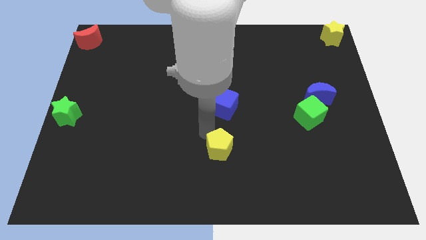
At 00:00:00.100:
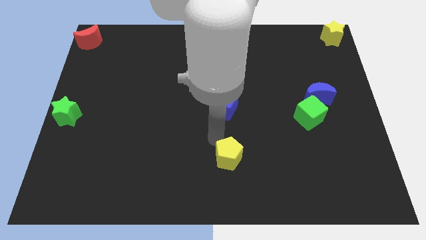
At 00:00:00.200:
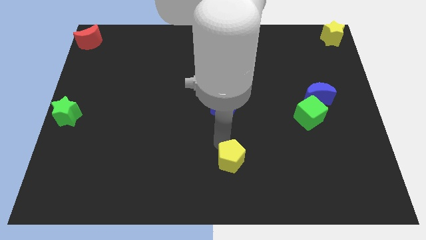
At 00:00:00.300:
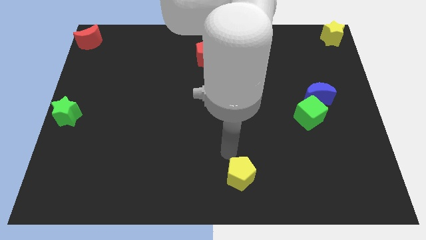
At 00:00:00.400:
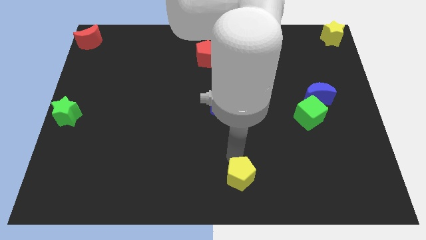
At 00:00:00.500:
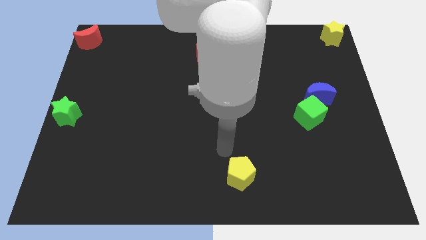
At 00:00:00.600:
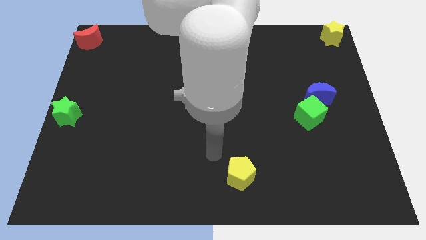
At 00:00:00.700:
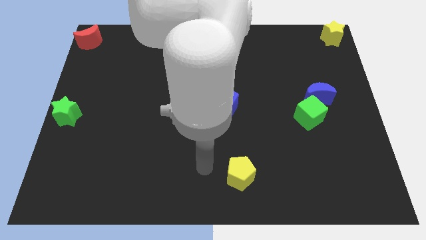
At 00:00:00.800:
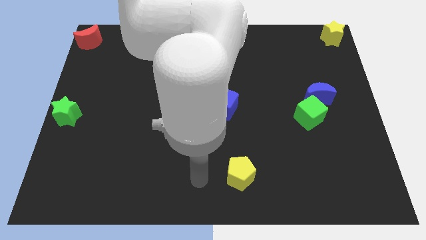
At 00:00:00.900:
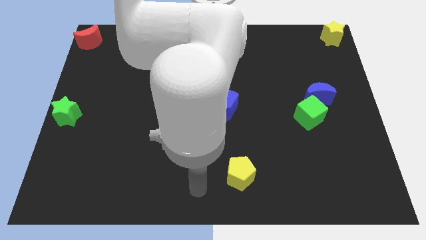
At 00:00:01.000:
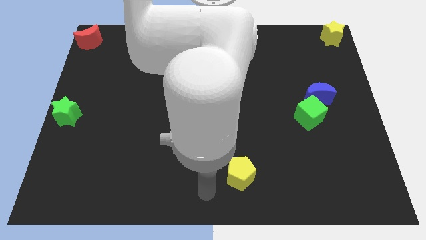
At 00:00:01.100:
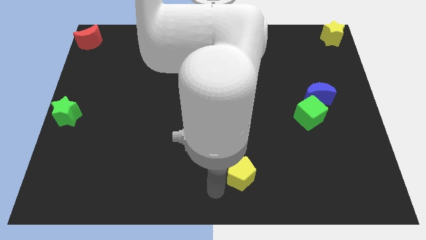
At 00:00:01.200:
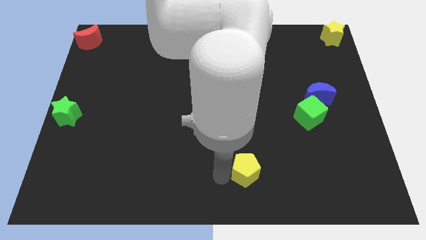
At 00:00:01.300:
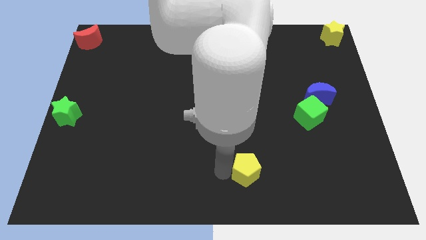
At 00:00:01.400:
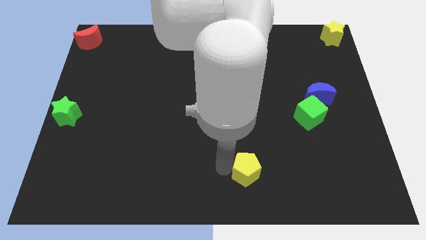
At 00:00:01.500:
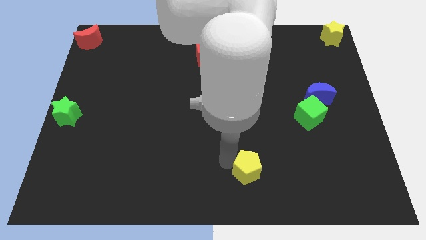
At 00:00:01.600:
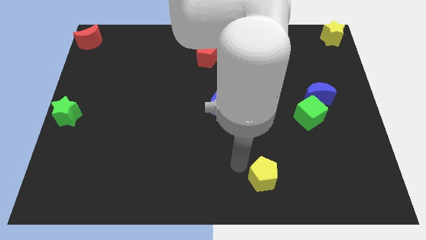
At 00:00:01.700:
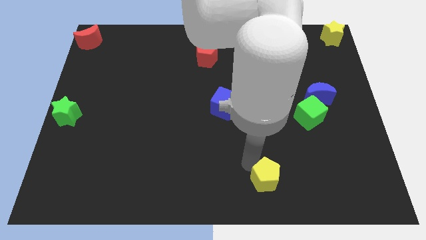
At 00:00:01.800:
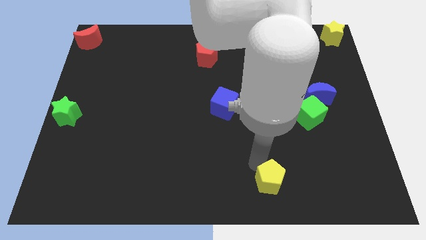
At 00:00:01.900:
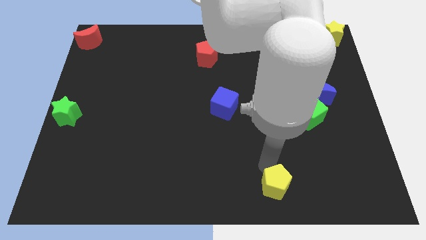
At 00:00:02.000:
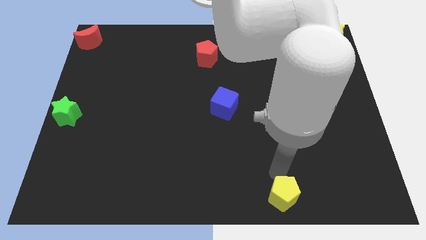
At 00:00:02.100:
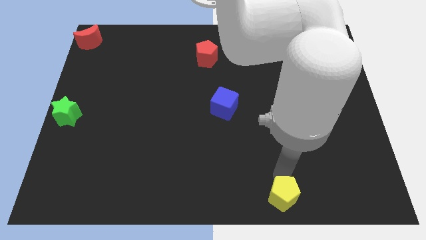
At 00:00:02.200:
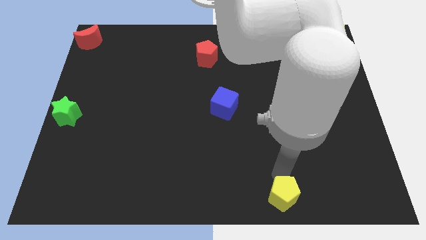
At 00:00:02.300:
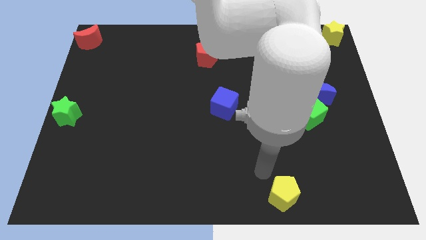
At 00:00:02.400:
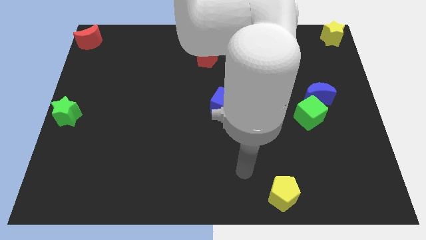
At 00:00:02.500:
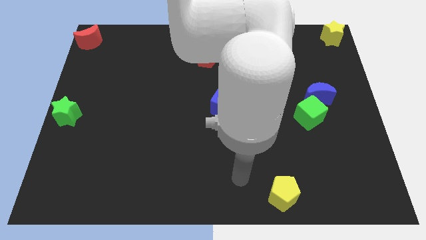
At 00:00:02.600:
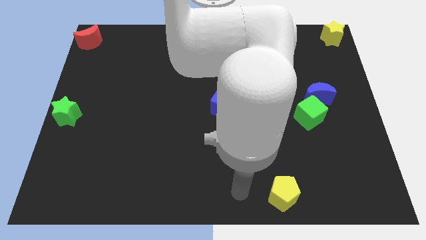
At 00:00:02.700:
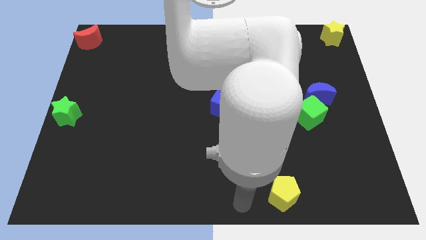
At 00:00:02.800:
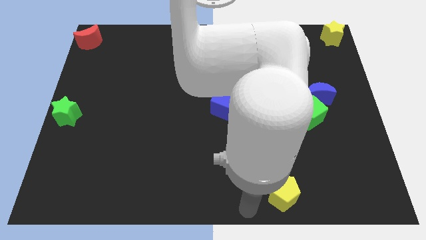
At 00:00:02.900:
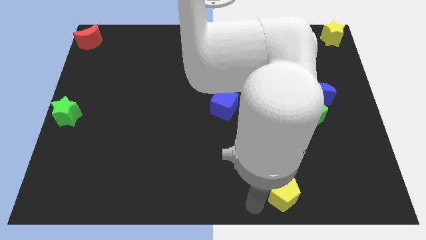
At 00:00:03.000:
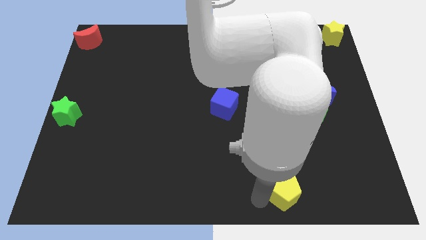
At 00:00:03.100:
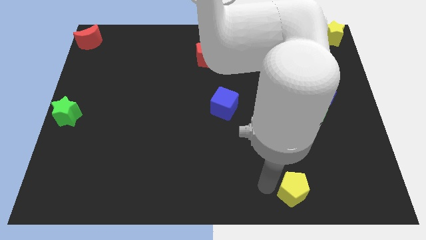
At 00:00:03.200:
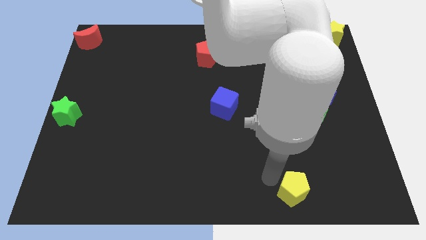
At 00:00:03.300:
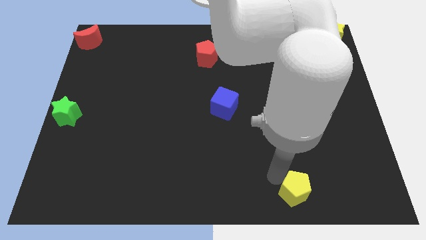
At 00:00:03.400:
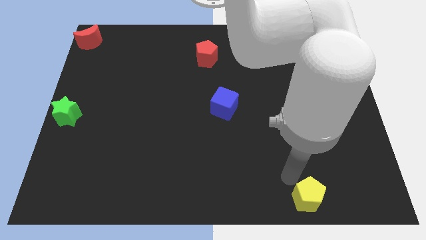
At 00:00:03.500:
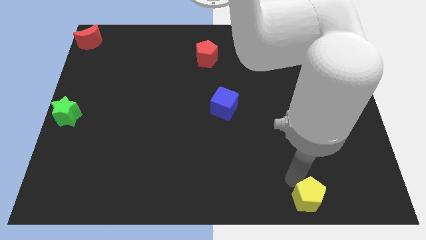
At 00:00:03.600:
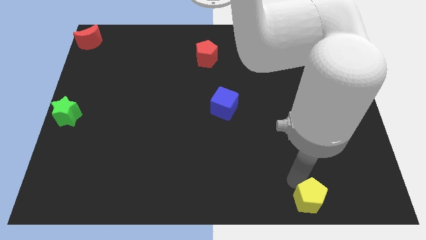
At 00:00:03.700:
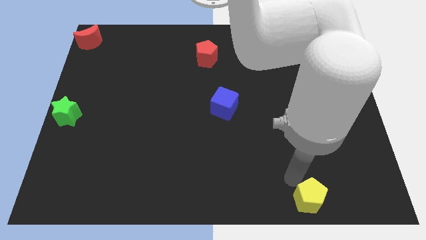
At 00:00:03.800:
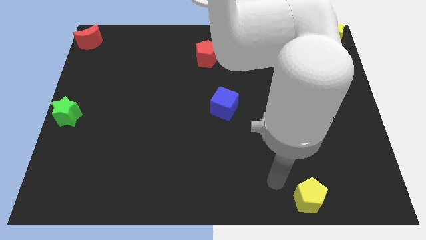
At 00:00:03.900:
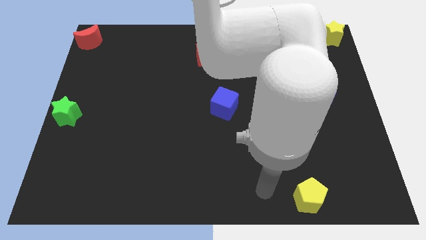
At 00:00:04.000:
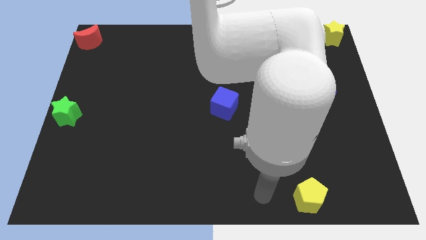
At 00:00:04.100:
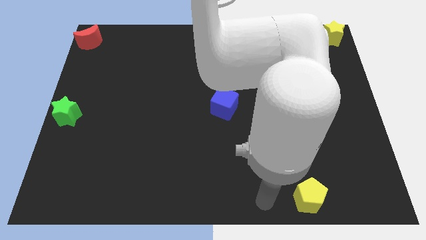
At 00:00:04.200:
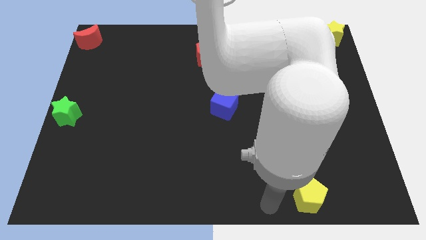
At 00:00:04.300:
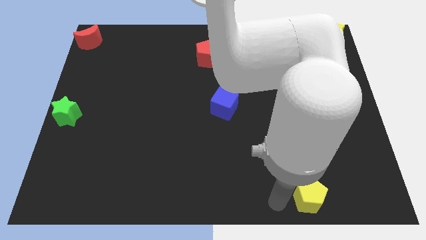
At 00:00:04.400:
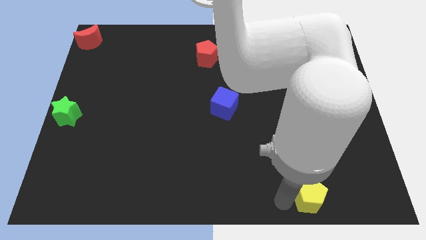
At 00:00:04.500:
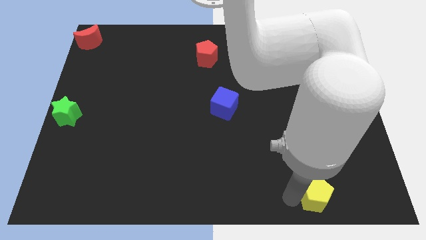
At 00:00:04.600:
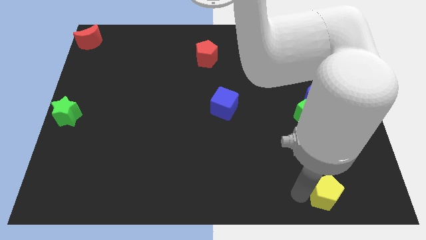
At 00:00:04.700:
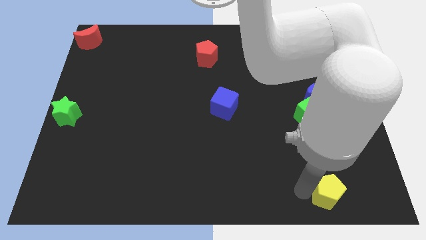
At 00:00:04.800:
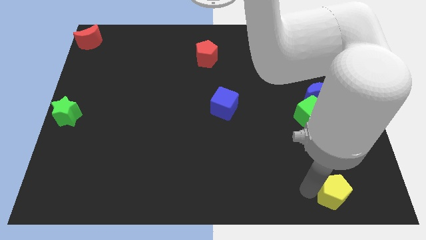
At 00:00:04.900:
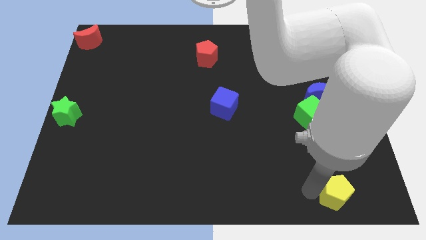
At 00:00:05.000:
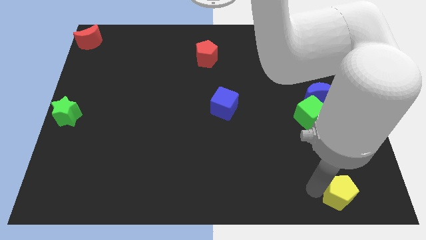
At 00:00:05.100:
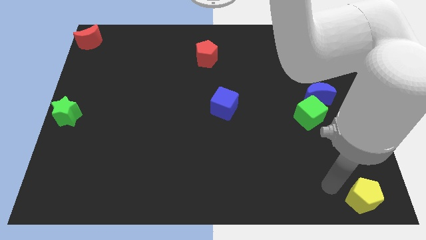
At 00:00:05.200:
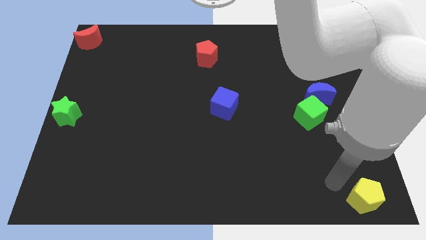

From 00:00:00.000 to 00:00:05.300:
drag the yellow pentagon to the right below corner of the board

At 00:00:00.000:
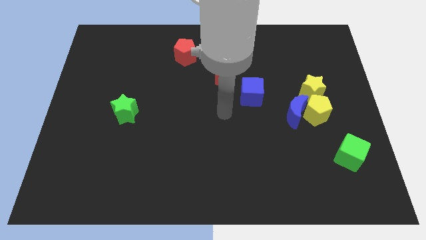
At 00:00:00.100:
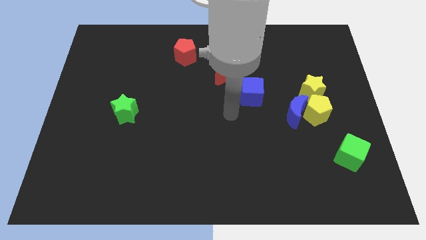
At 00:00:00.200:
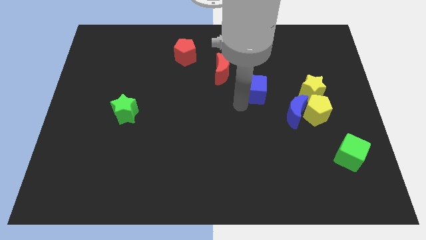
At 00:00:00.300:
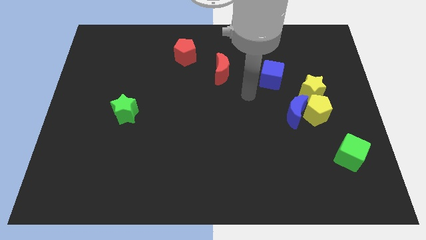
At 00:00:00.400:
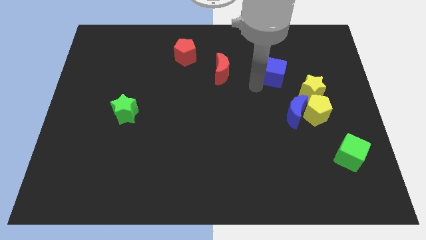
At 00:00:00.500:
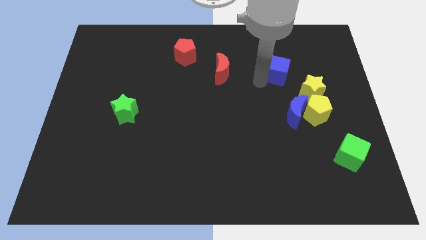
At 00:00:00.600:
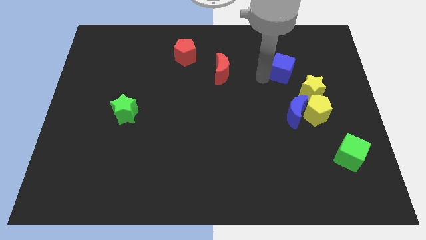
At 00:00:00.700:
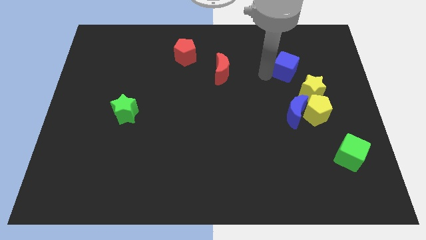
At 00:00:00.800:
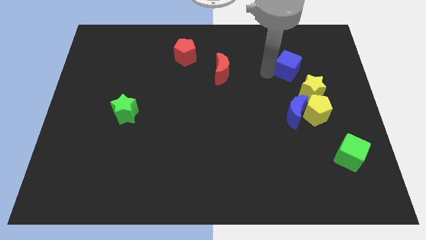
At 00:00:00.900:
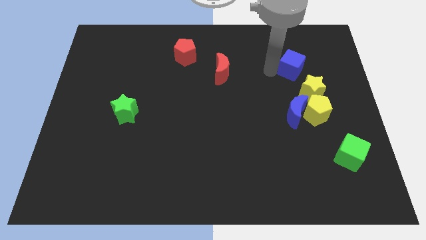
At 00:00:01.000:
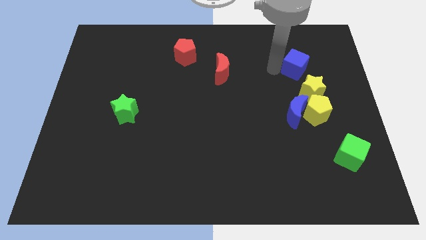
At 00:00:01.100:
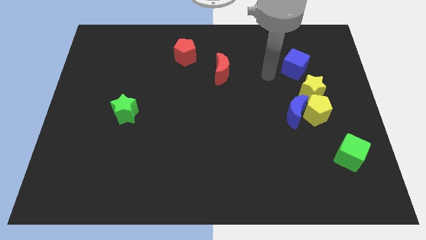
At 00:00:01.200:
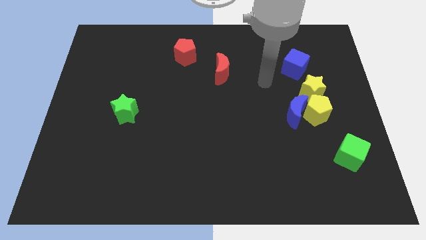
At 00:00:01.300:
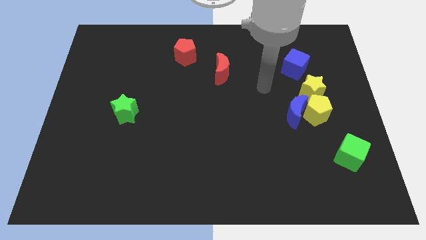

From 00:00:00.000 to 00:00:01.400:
push blue cube diagonally upwards

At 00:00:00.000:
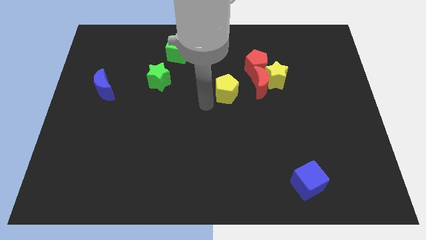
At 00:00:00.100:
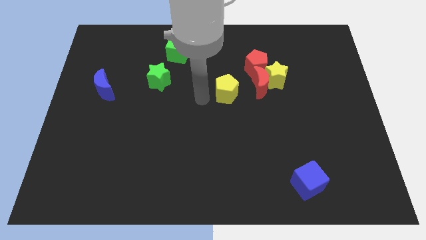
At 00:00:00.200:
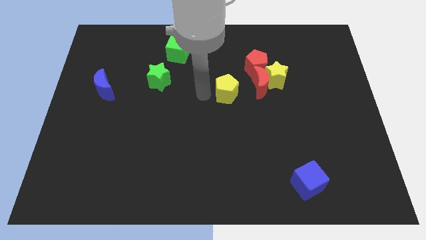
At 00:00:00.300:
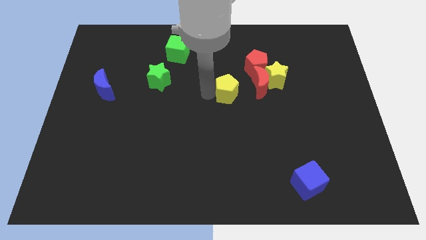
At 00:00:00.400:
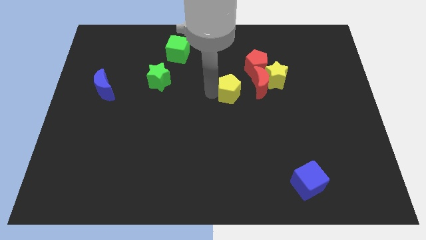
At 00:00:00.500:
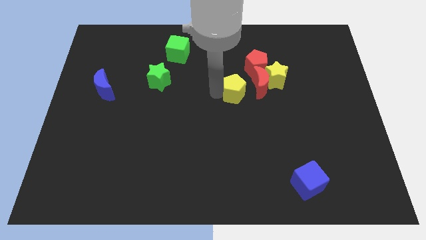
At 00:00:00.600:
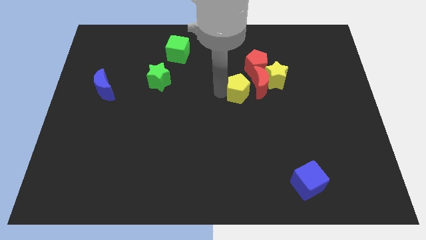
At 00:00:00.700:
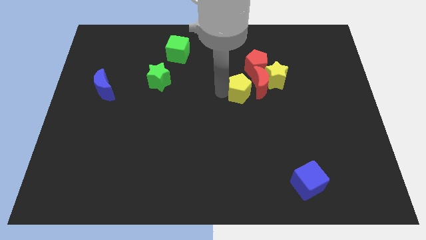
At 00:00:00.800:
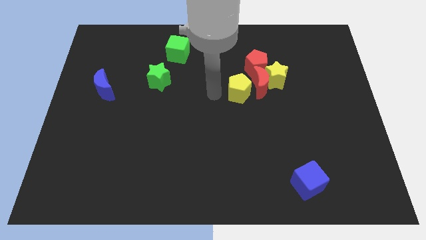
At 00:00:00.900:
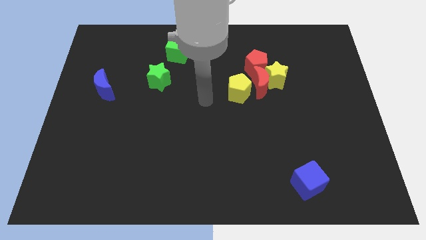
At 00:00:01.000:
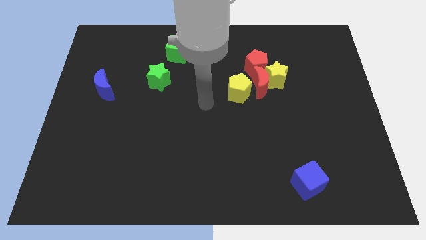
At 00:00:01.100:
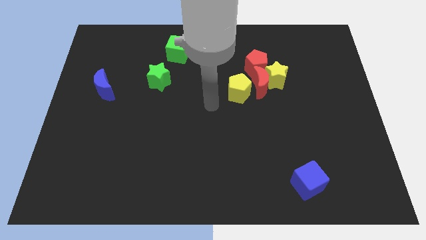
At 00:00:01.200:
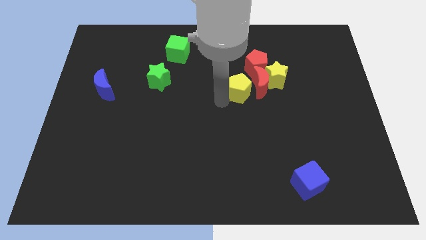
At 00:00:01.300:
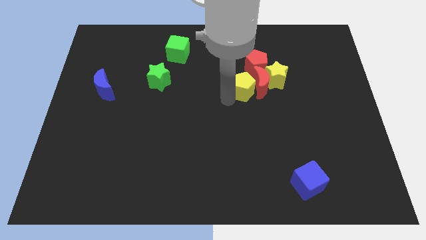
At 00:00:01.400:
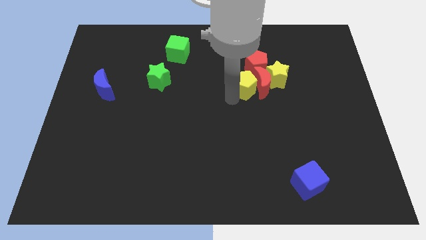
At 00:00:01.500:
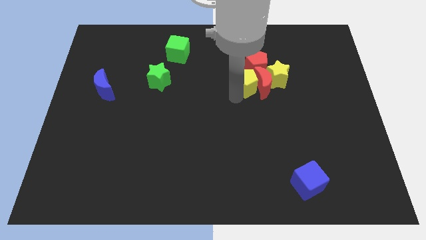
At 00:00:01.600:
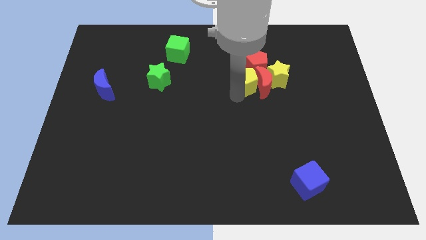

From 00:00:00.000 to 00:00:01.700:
move the yellow pentagon towards the red crescent

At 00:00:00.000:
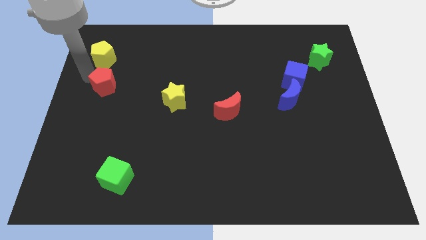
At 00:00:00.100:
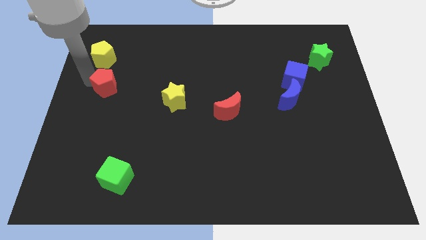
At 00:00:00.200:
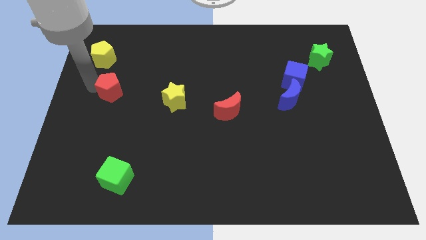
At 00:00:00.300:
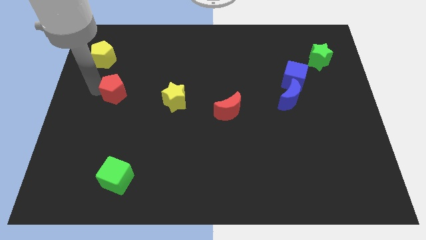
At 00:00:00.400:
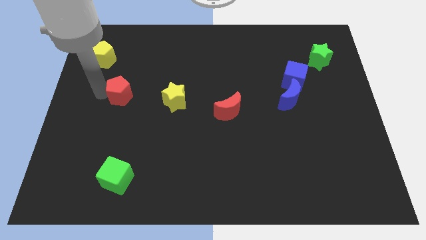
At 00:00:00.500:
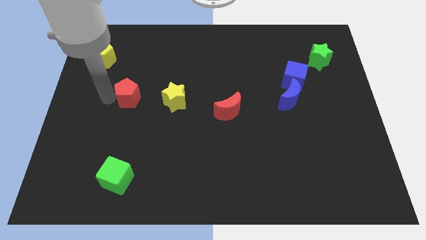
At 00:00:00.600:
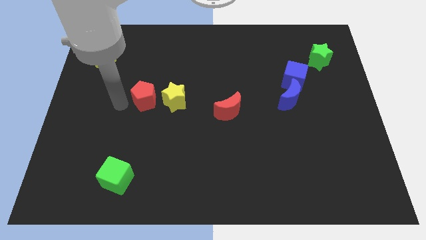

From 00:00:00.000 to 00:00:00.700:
move the red pentagon to the left of the yellow star
